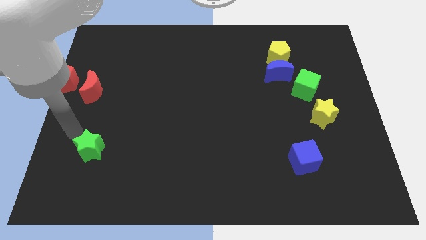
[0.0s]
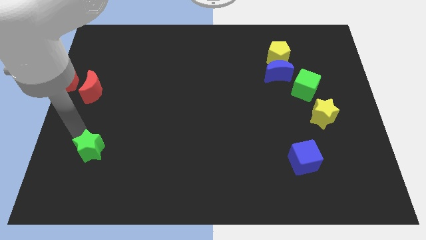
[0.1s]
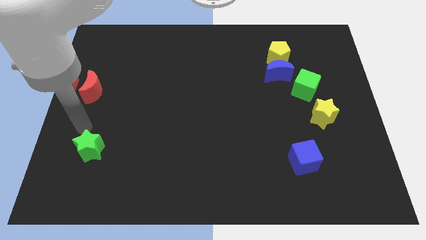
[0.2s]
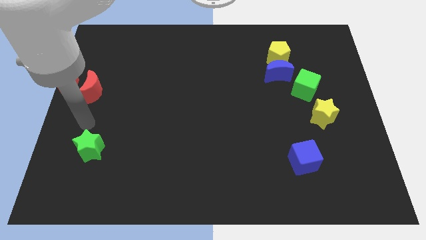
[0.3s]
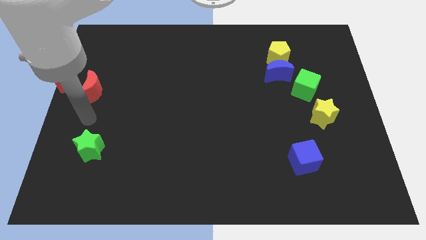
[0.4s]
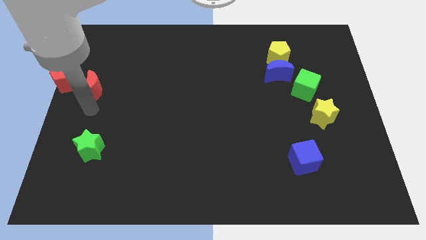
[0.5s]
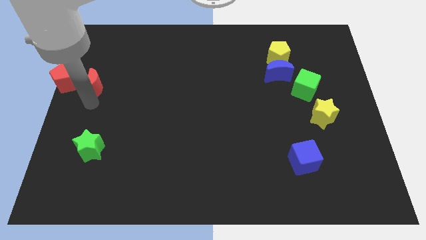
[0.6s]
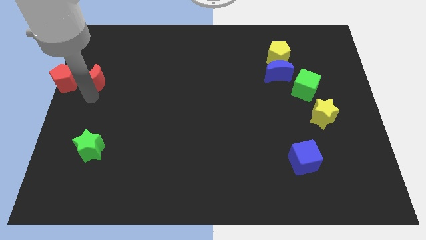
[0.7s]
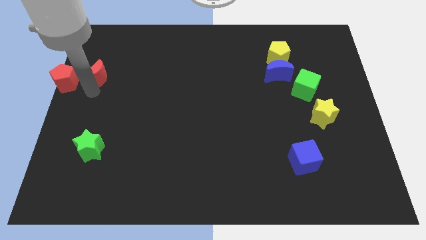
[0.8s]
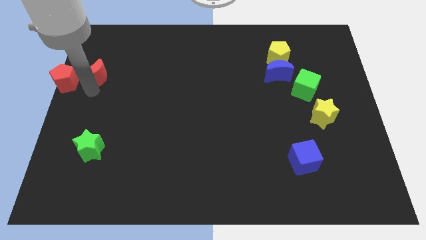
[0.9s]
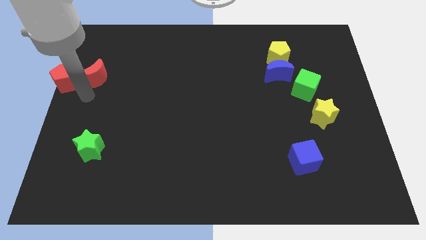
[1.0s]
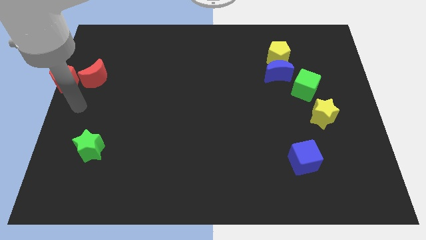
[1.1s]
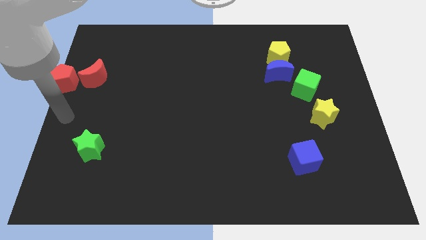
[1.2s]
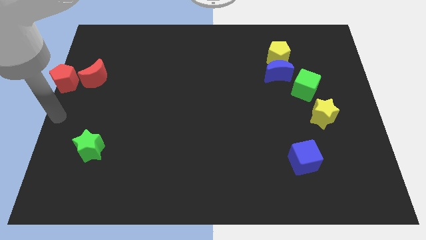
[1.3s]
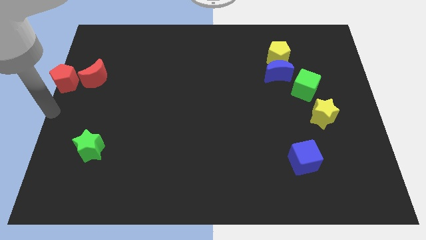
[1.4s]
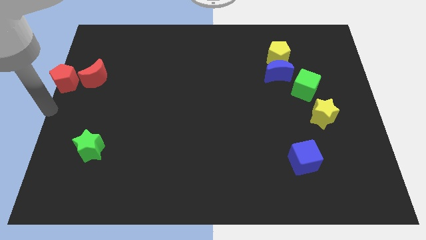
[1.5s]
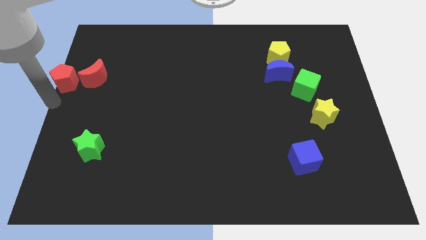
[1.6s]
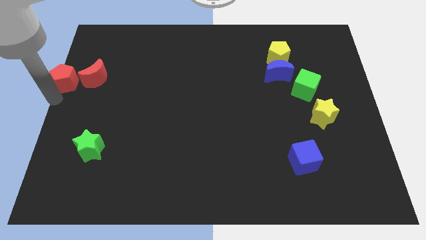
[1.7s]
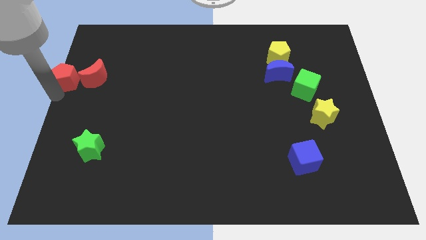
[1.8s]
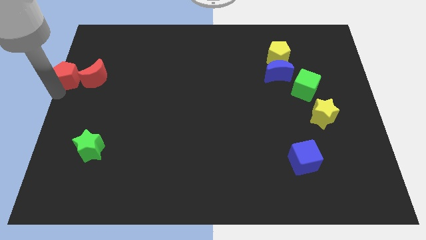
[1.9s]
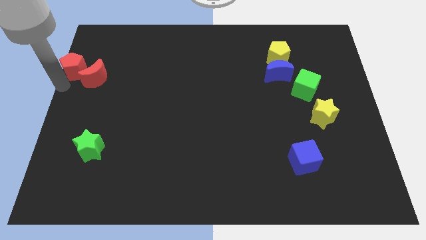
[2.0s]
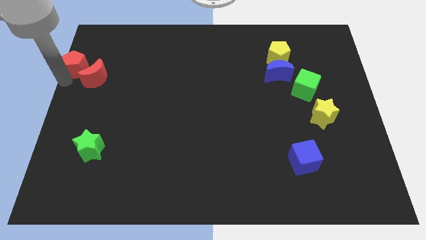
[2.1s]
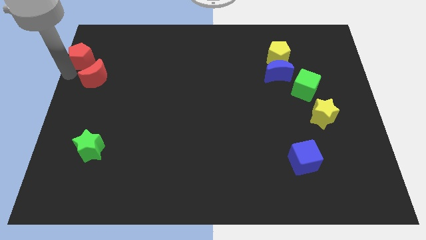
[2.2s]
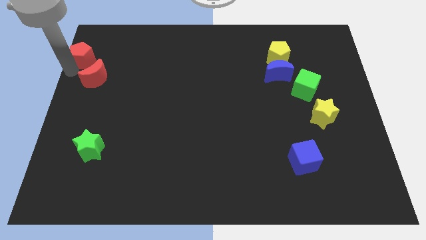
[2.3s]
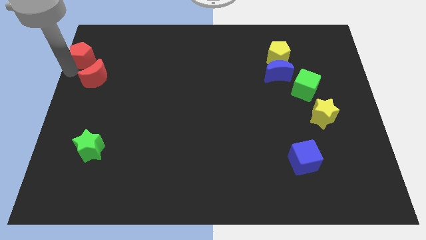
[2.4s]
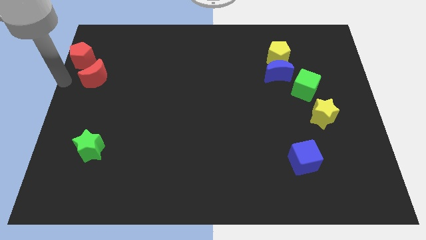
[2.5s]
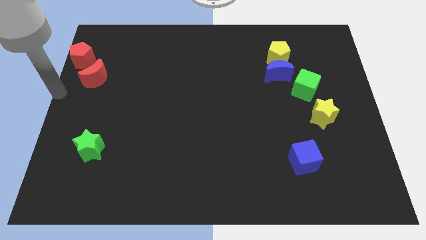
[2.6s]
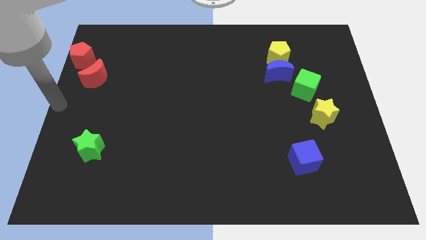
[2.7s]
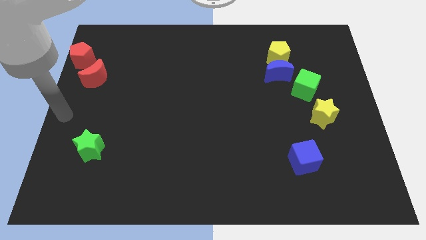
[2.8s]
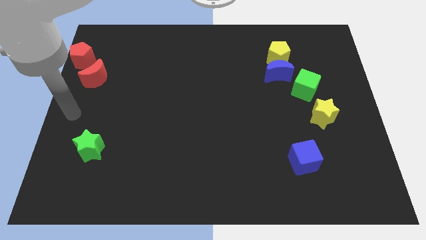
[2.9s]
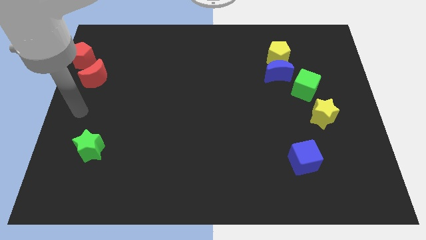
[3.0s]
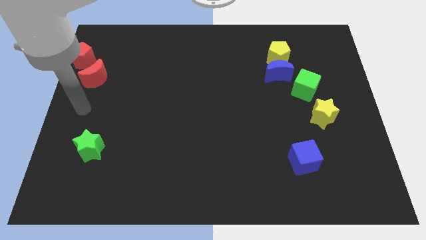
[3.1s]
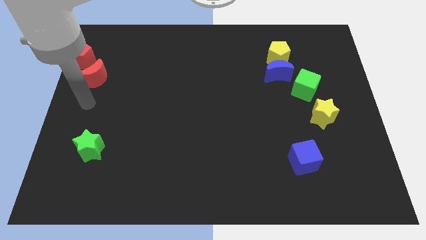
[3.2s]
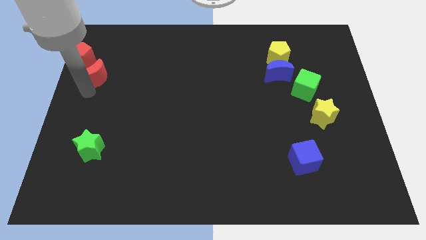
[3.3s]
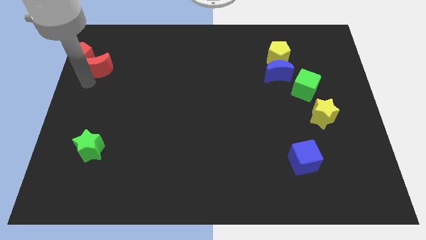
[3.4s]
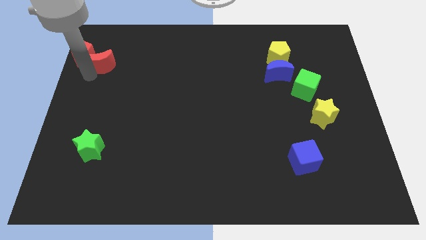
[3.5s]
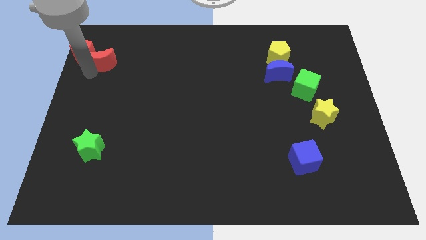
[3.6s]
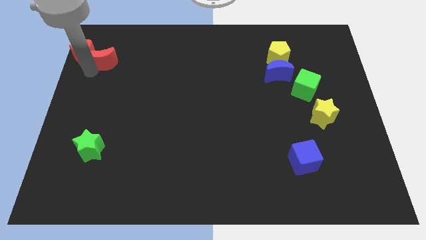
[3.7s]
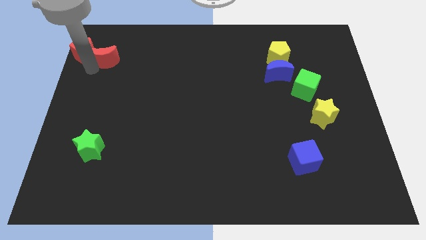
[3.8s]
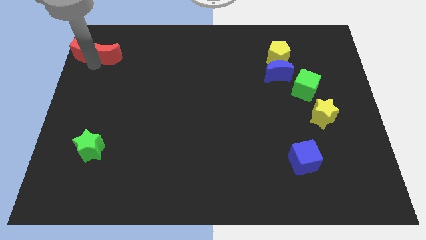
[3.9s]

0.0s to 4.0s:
slide red moon and red pentagon towards top left

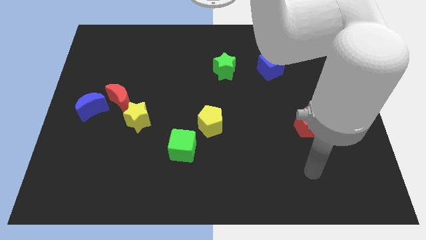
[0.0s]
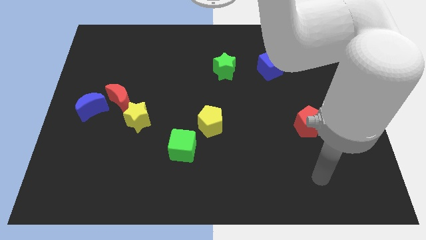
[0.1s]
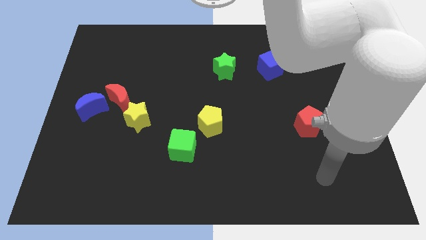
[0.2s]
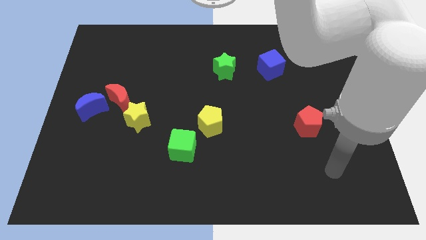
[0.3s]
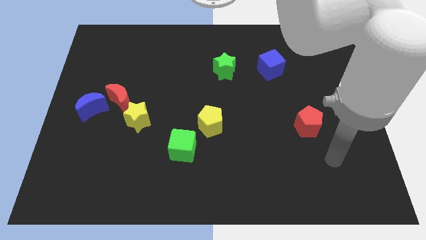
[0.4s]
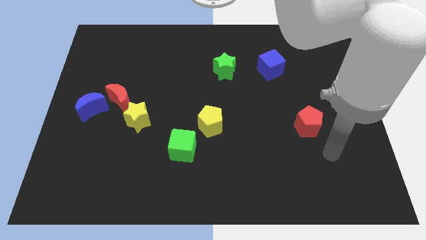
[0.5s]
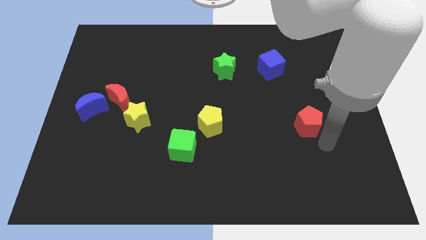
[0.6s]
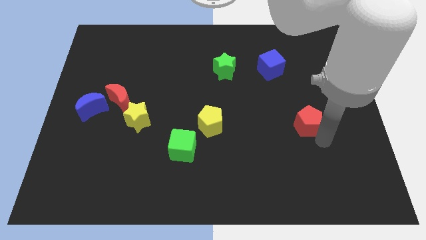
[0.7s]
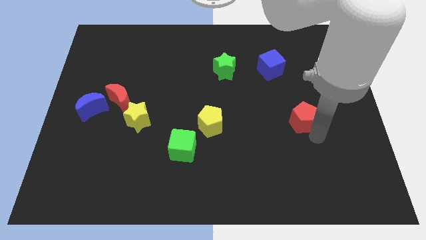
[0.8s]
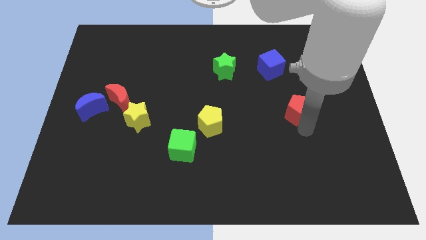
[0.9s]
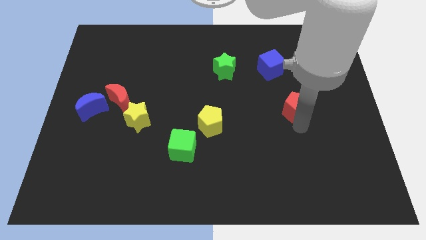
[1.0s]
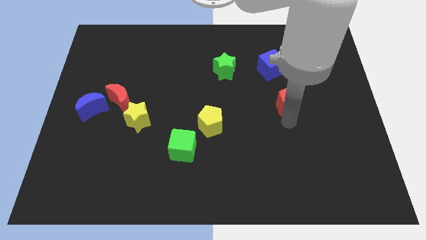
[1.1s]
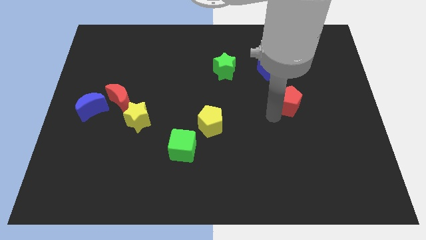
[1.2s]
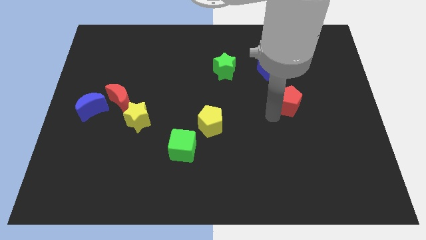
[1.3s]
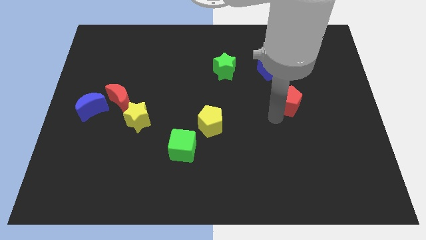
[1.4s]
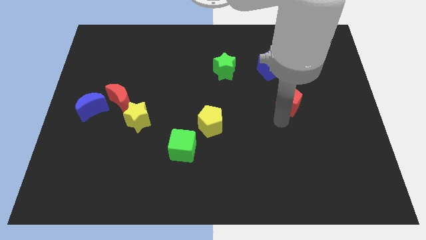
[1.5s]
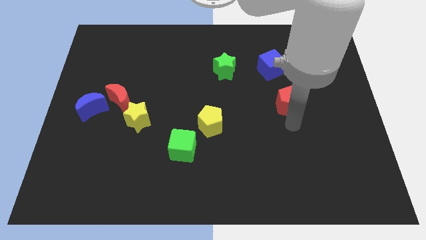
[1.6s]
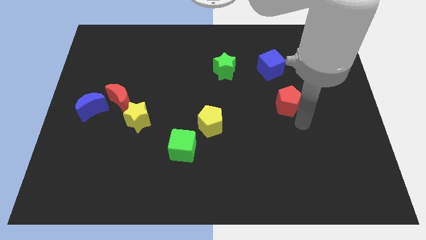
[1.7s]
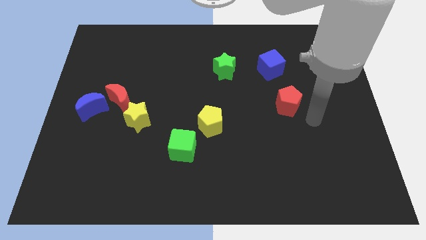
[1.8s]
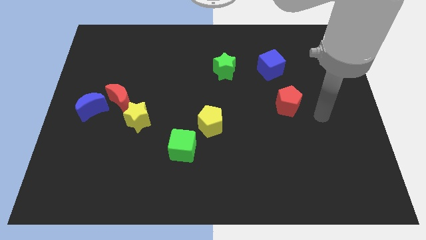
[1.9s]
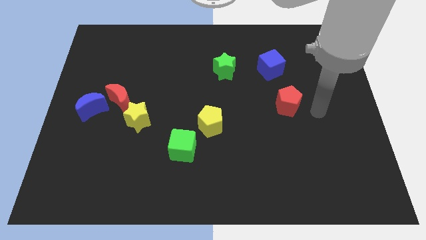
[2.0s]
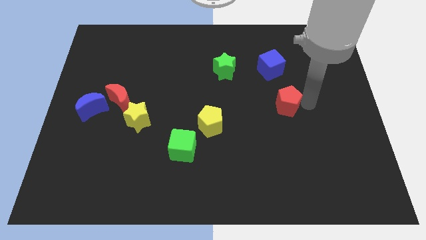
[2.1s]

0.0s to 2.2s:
place red pentagon below blue cube

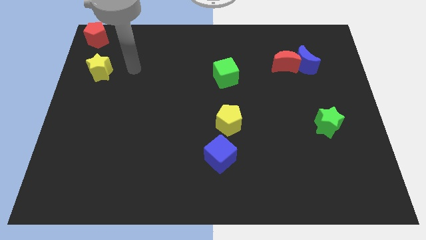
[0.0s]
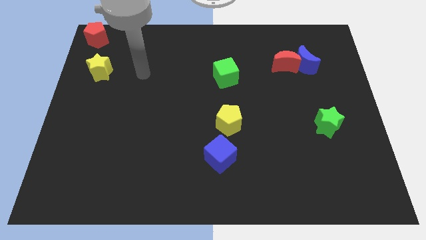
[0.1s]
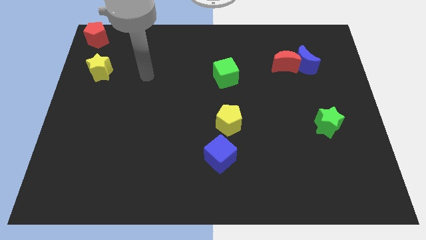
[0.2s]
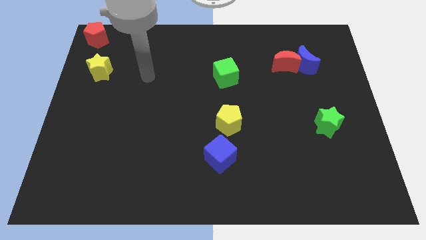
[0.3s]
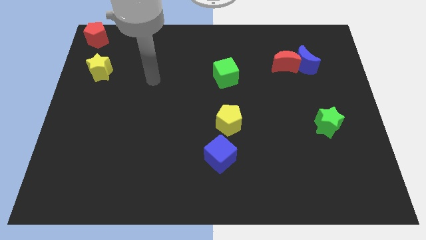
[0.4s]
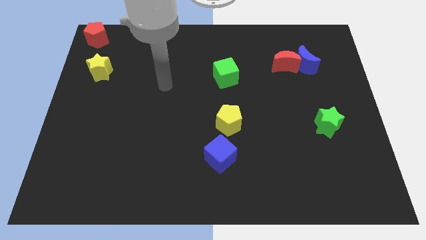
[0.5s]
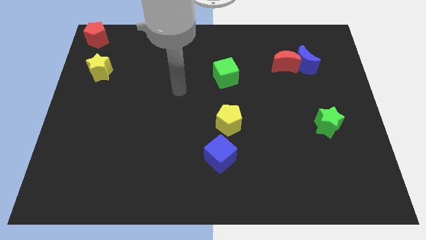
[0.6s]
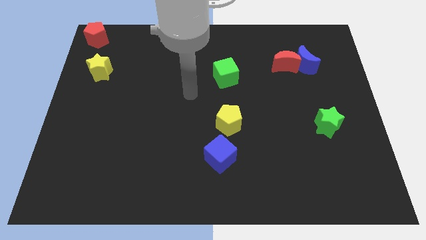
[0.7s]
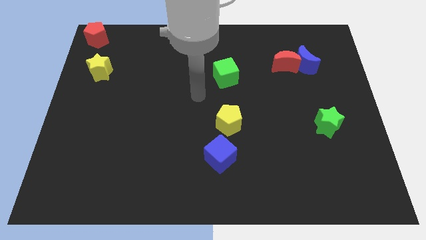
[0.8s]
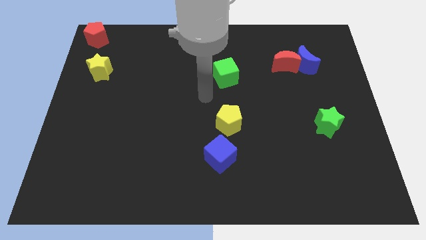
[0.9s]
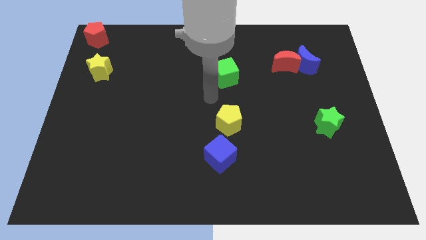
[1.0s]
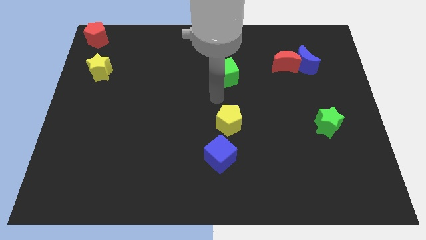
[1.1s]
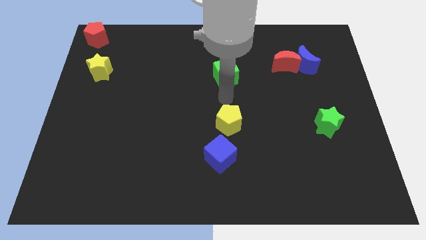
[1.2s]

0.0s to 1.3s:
place arm in between green cube and yellow pentagon

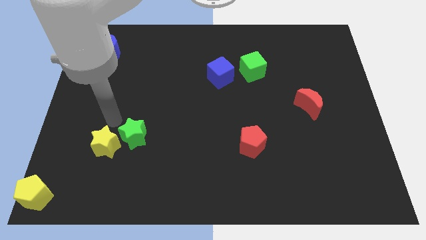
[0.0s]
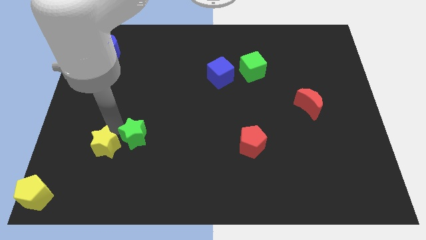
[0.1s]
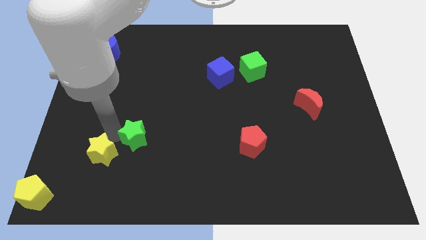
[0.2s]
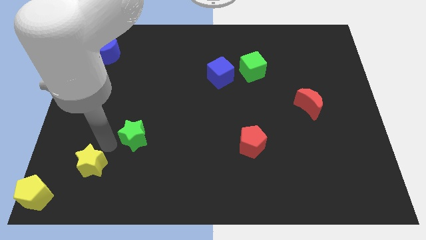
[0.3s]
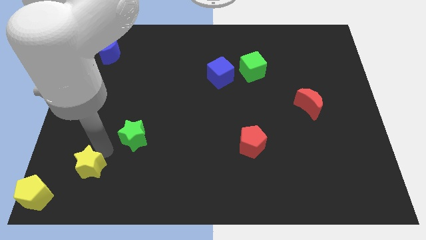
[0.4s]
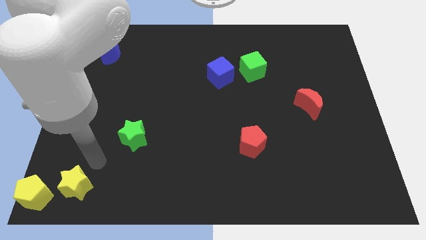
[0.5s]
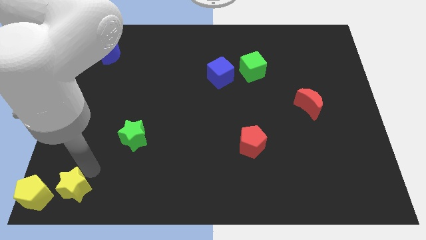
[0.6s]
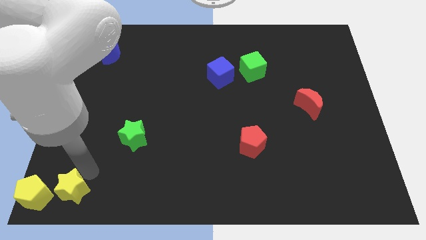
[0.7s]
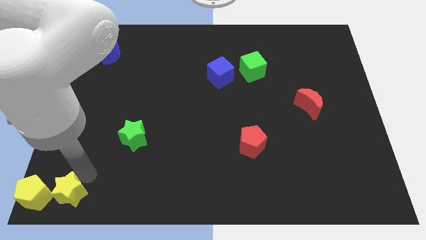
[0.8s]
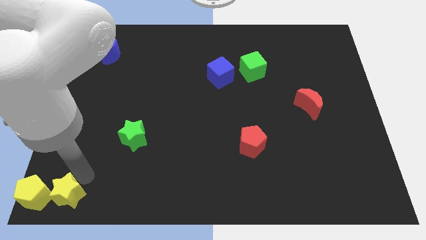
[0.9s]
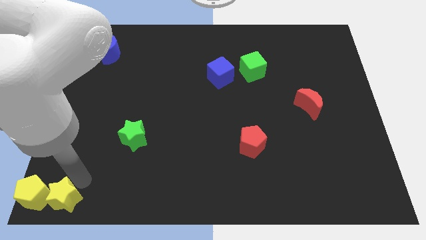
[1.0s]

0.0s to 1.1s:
push the yellow star to the right of the yellow pentagon

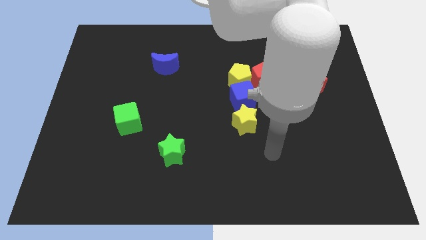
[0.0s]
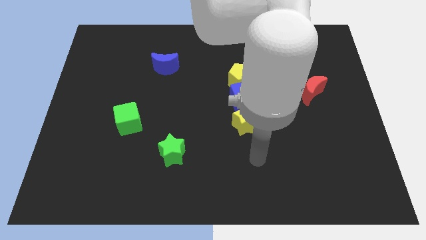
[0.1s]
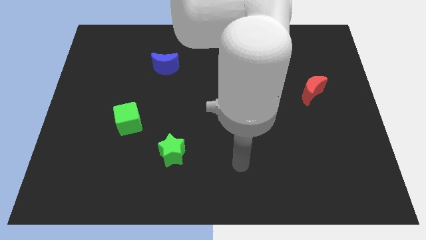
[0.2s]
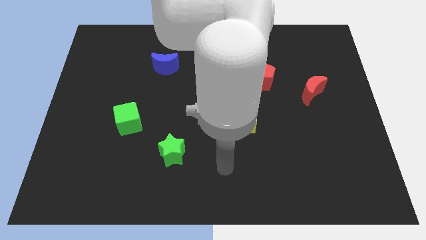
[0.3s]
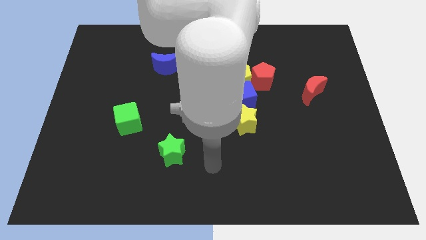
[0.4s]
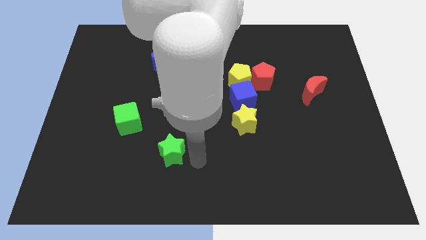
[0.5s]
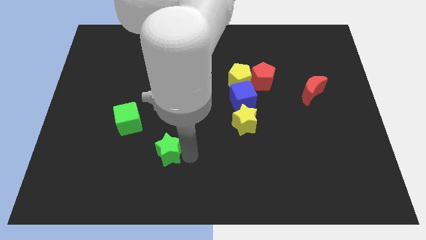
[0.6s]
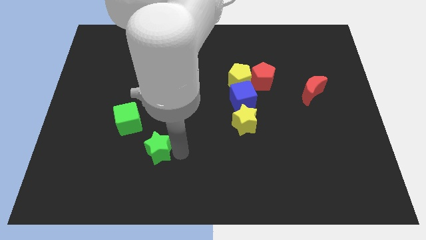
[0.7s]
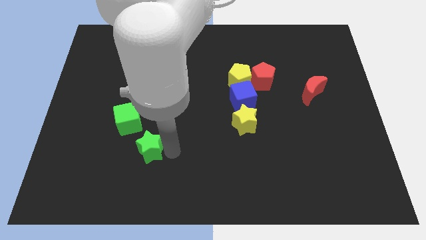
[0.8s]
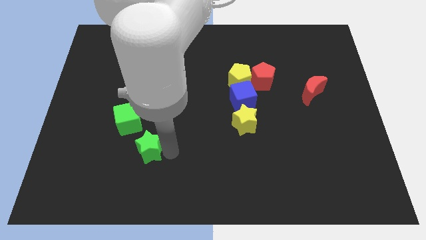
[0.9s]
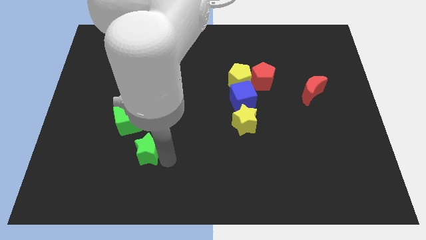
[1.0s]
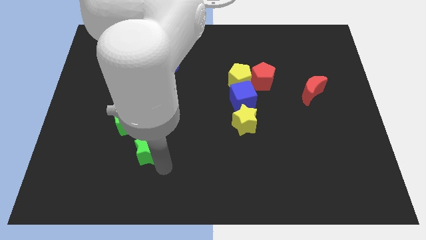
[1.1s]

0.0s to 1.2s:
drag the green star to the left
